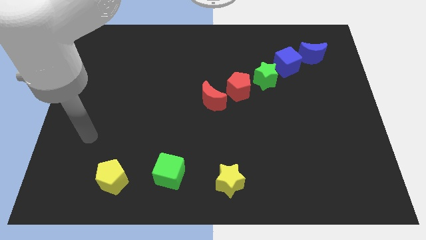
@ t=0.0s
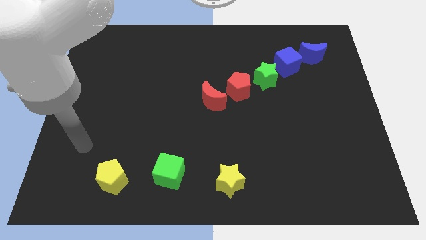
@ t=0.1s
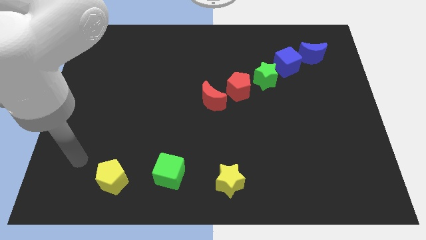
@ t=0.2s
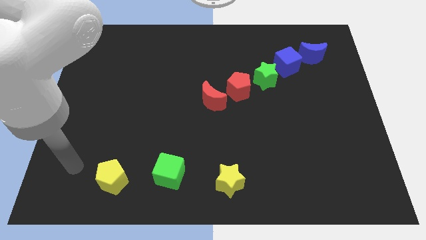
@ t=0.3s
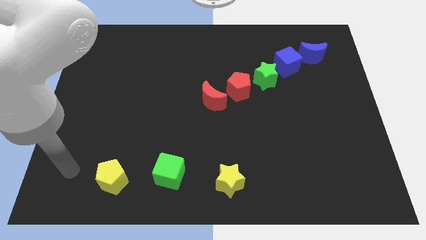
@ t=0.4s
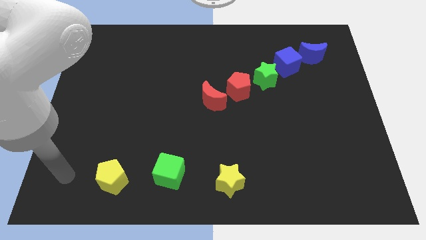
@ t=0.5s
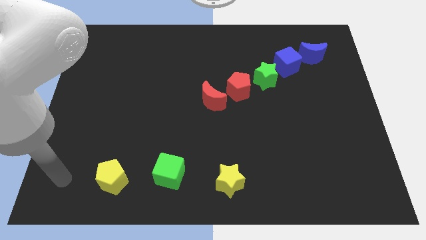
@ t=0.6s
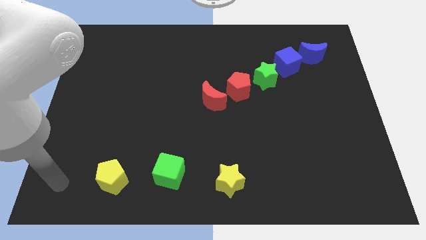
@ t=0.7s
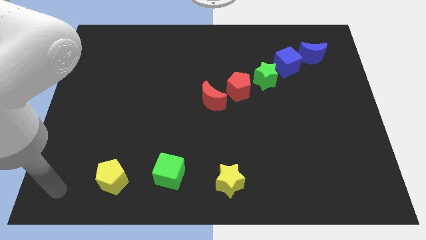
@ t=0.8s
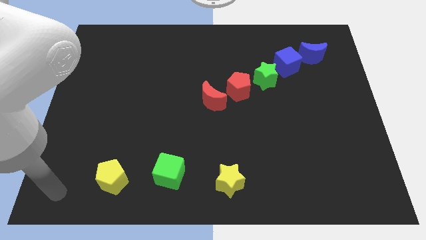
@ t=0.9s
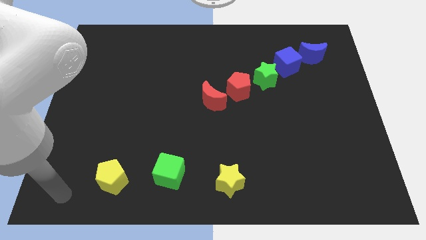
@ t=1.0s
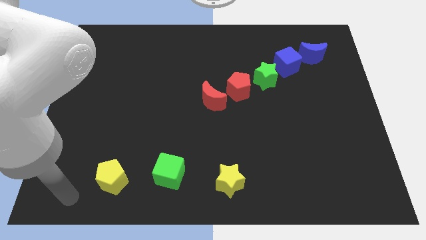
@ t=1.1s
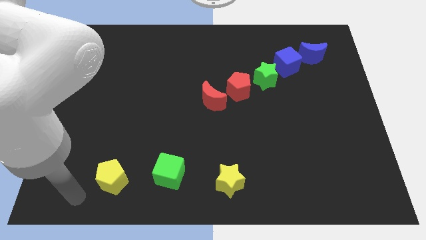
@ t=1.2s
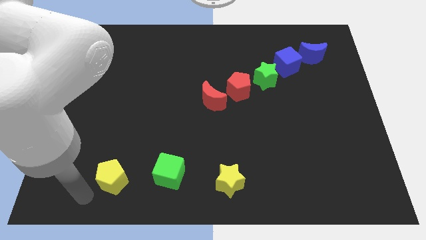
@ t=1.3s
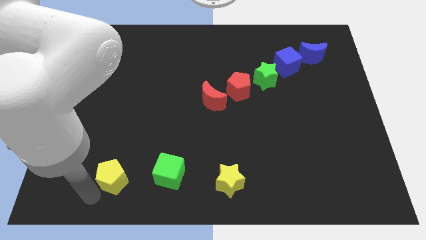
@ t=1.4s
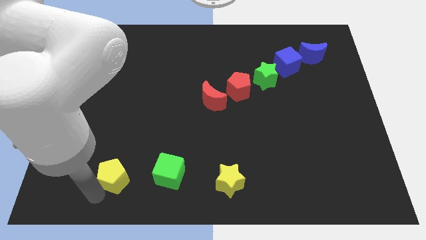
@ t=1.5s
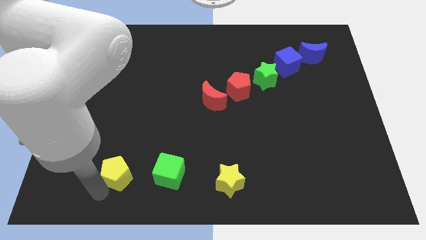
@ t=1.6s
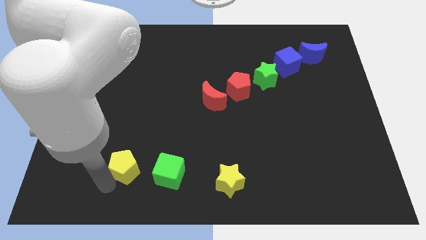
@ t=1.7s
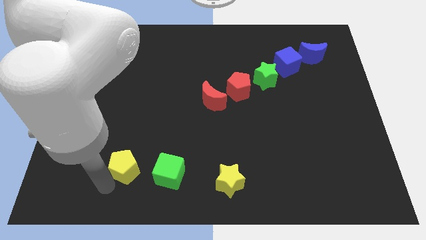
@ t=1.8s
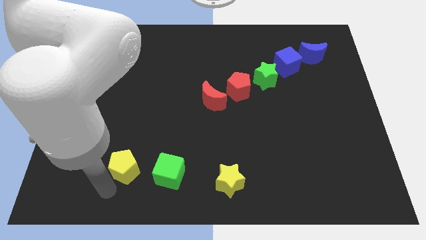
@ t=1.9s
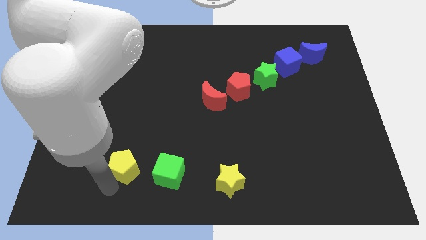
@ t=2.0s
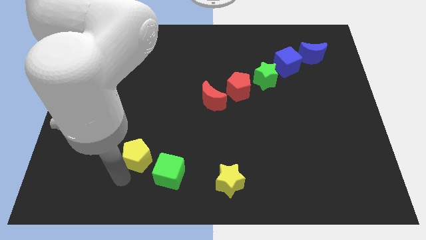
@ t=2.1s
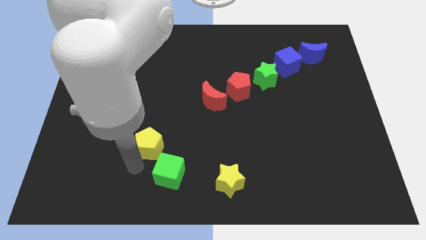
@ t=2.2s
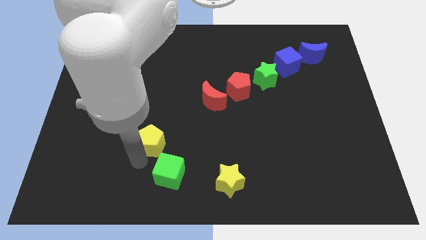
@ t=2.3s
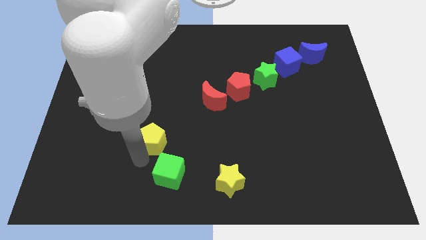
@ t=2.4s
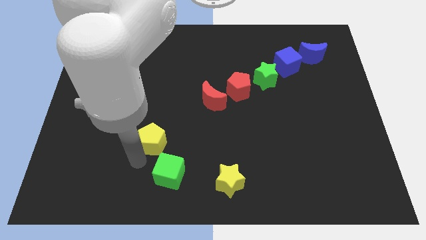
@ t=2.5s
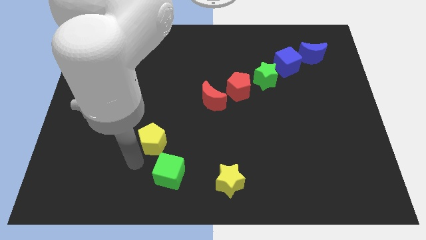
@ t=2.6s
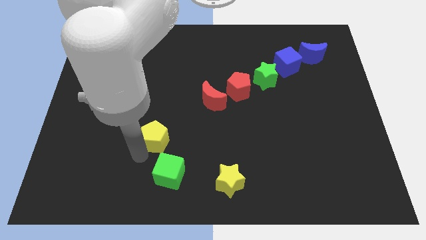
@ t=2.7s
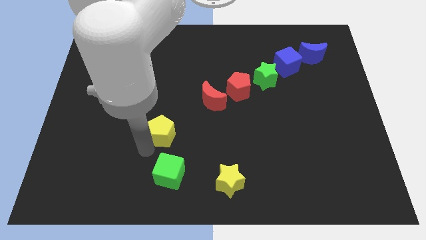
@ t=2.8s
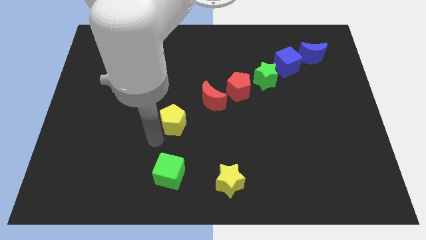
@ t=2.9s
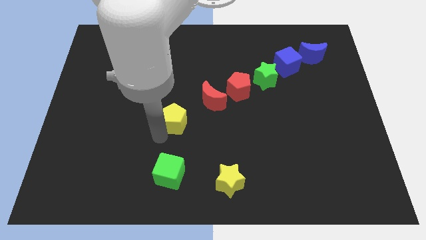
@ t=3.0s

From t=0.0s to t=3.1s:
place the yellow pentagon above the green cube

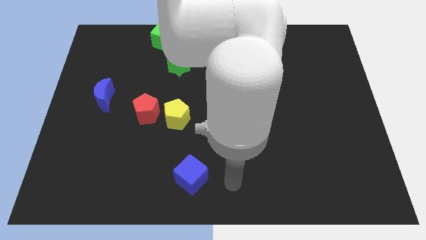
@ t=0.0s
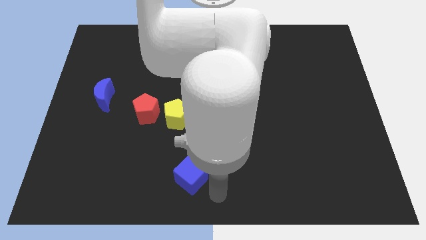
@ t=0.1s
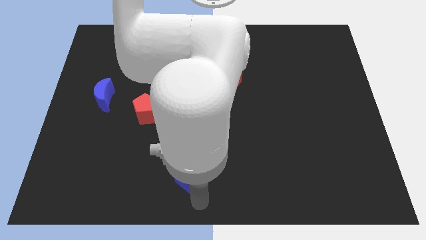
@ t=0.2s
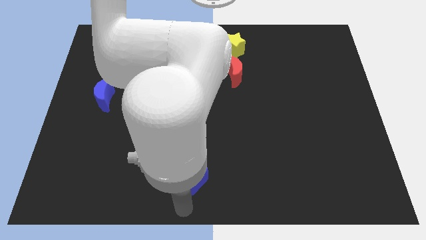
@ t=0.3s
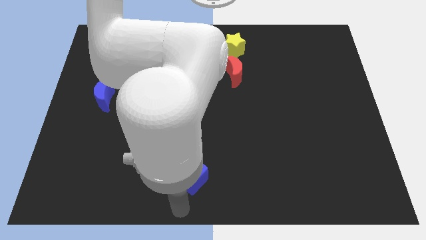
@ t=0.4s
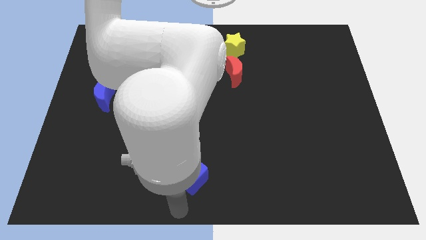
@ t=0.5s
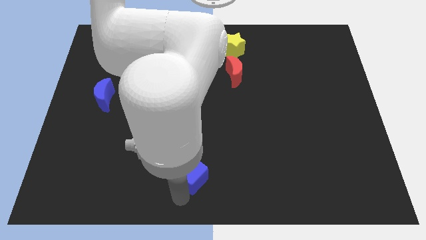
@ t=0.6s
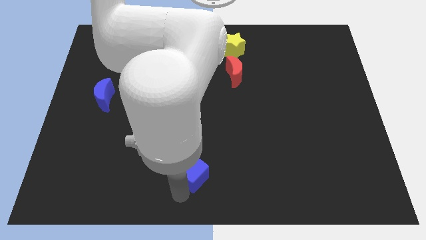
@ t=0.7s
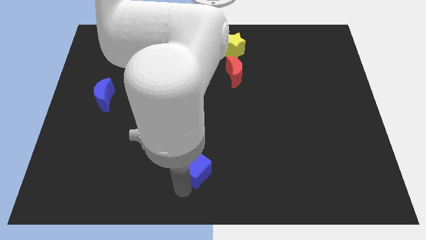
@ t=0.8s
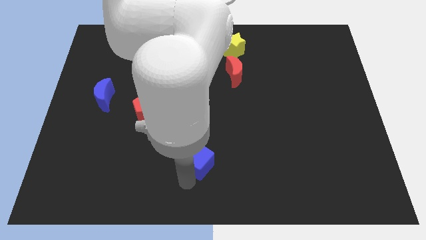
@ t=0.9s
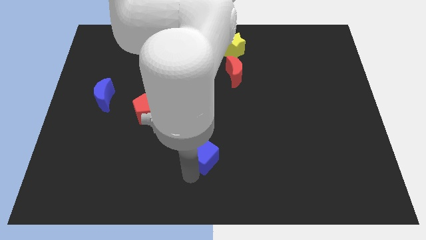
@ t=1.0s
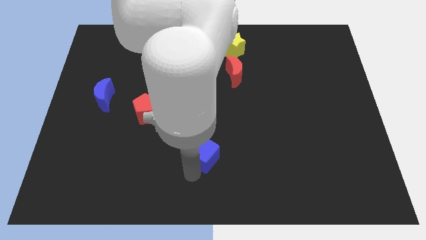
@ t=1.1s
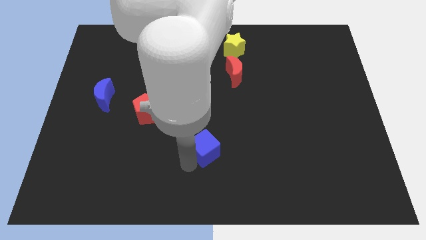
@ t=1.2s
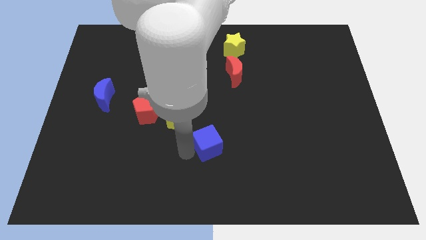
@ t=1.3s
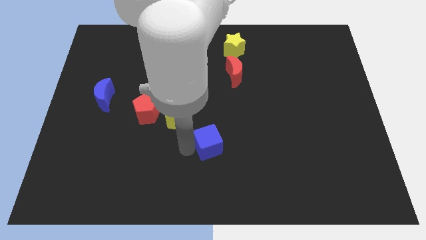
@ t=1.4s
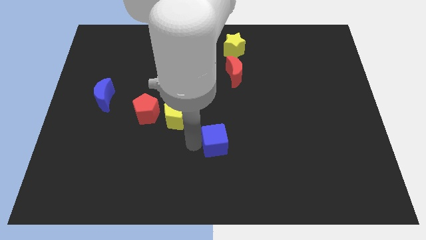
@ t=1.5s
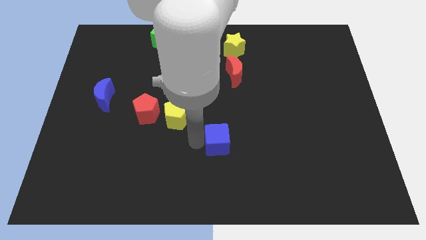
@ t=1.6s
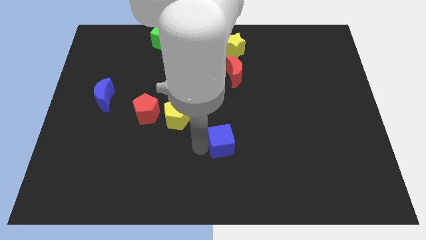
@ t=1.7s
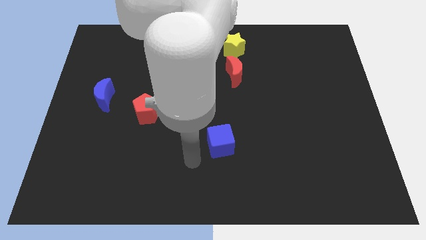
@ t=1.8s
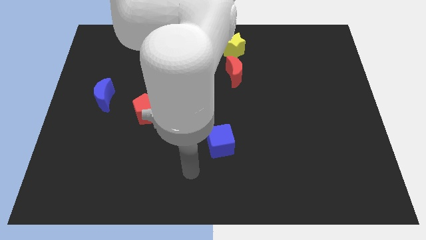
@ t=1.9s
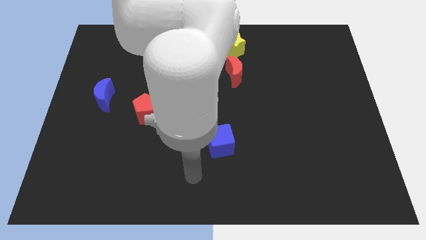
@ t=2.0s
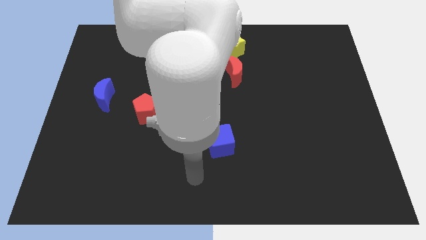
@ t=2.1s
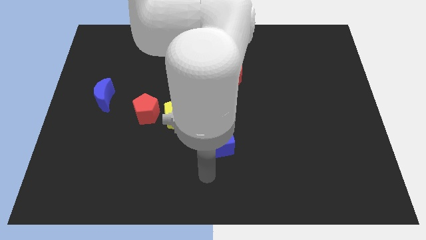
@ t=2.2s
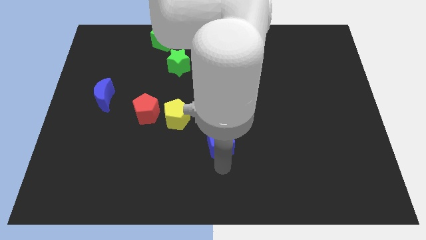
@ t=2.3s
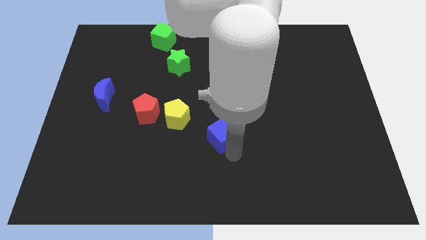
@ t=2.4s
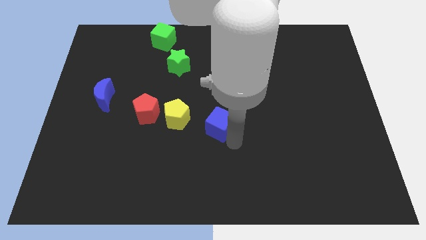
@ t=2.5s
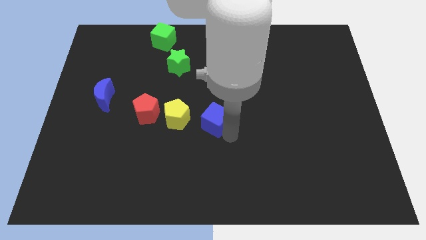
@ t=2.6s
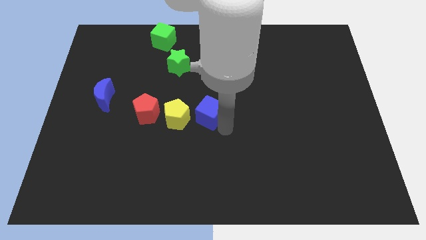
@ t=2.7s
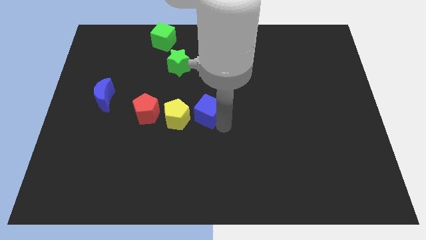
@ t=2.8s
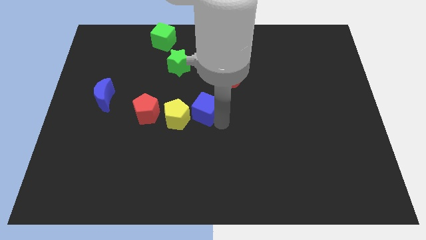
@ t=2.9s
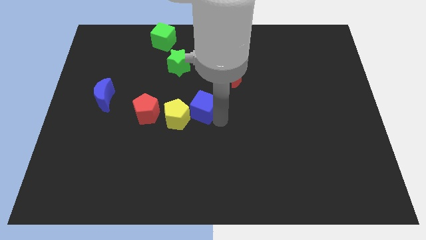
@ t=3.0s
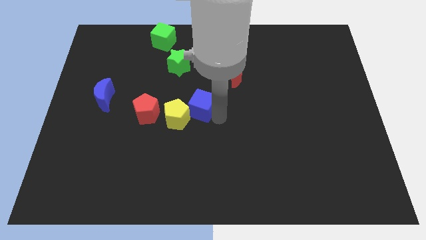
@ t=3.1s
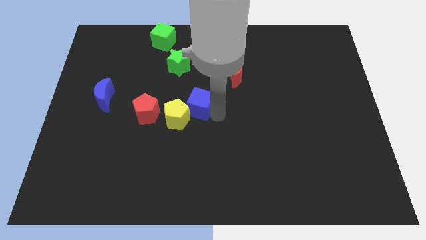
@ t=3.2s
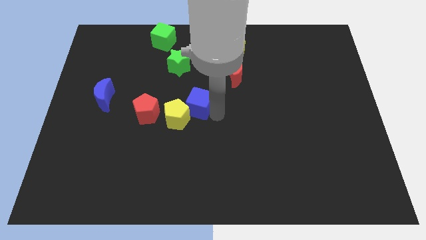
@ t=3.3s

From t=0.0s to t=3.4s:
move the bleu cube into the top right side of the yellow pentagon

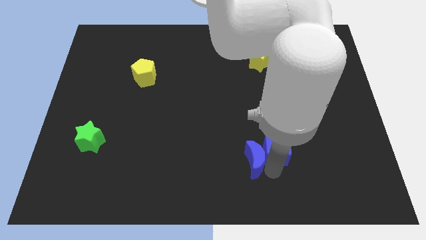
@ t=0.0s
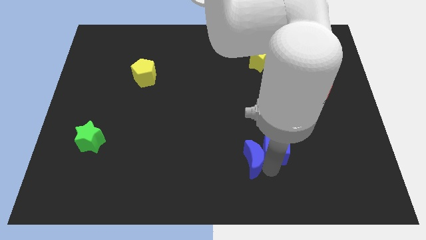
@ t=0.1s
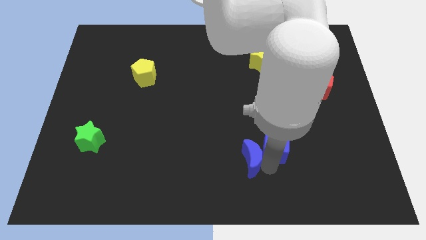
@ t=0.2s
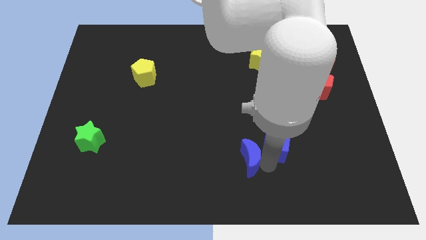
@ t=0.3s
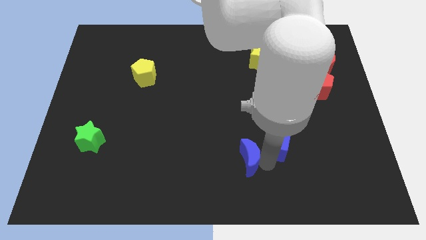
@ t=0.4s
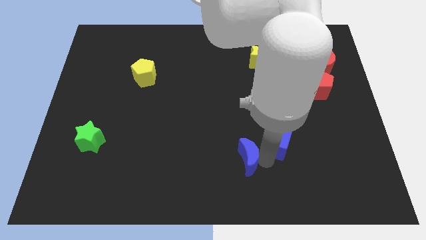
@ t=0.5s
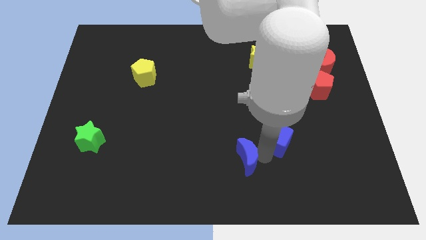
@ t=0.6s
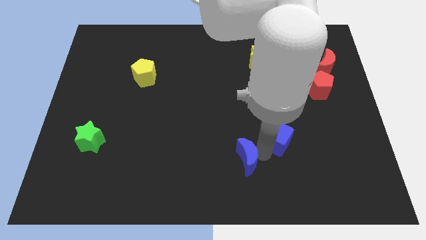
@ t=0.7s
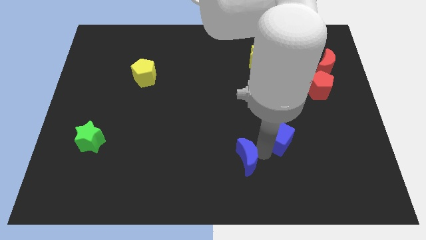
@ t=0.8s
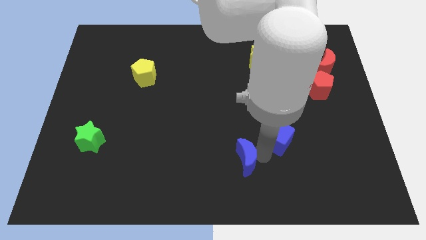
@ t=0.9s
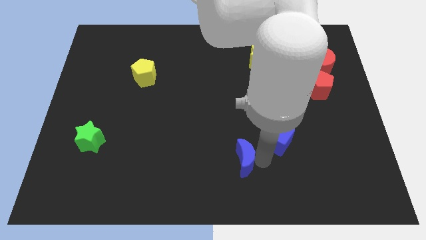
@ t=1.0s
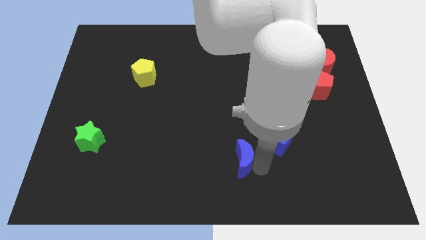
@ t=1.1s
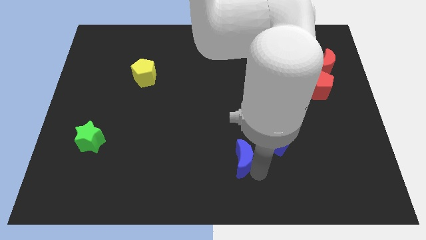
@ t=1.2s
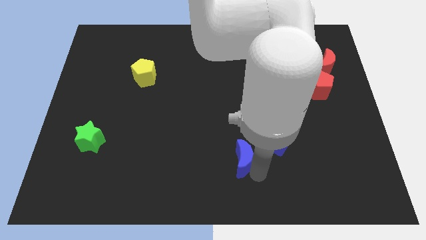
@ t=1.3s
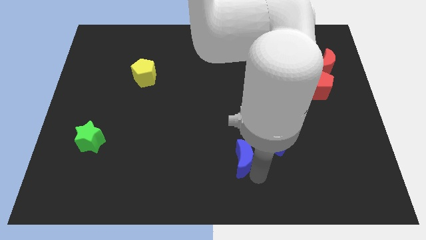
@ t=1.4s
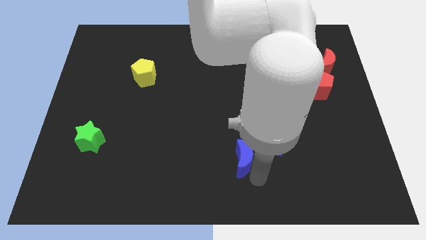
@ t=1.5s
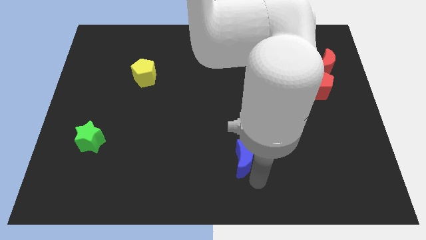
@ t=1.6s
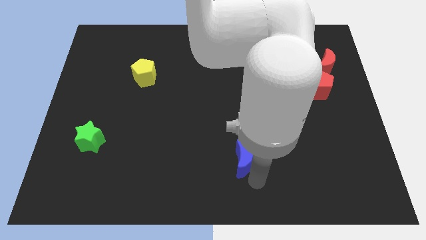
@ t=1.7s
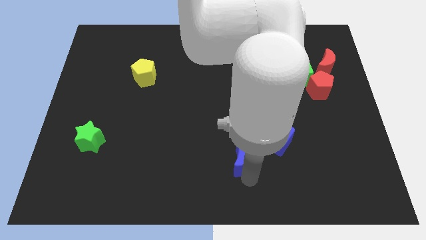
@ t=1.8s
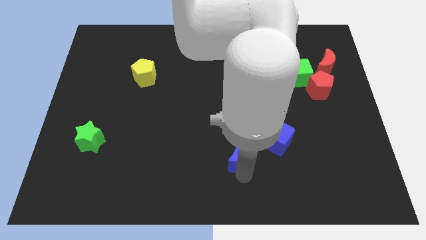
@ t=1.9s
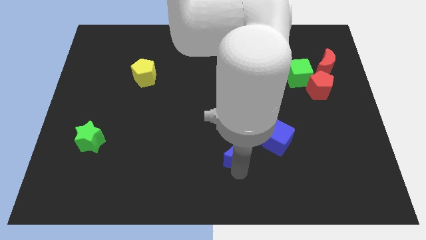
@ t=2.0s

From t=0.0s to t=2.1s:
move the blue crescent towards the left of the blue cube

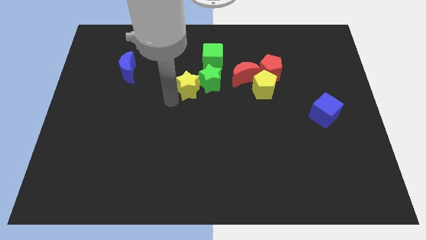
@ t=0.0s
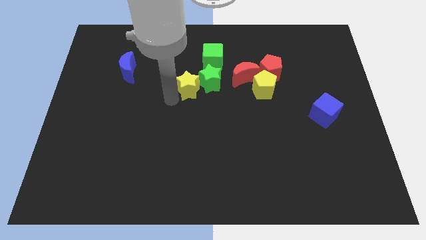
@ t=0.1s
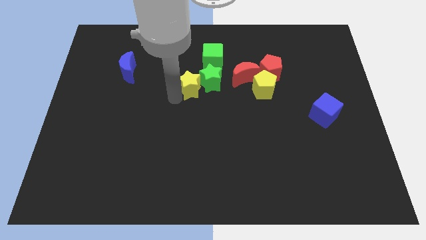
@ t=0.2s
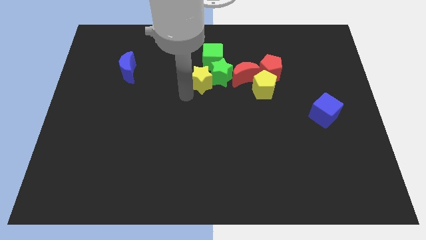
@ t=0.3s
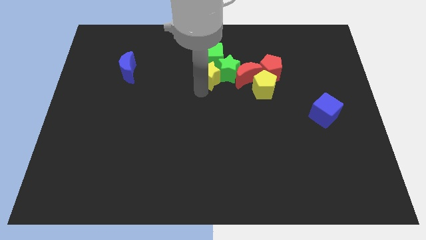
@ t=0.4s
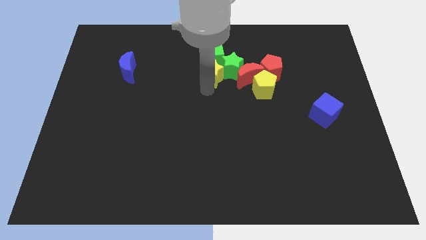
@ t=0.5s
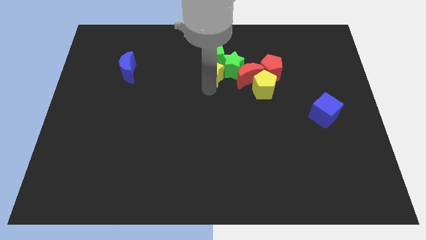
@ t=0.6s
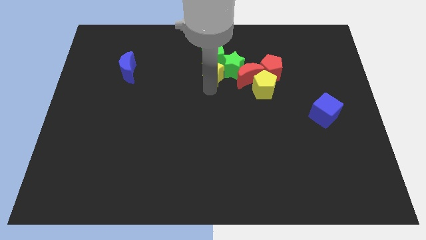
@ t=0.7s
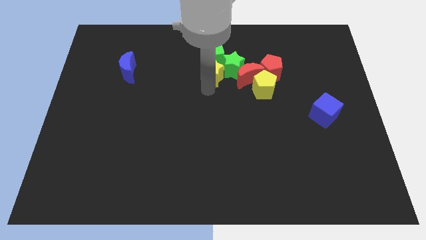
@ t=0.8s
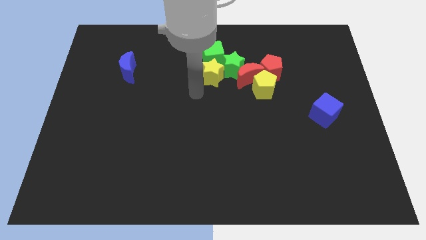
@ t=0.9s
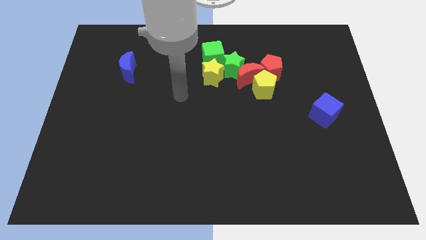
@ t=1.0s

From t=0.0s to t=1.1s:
push yellow star into green cube
